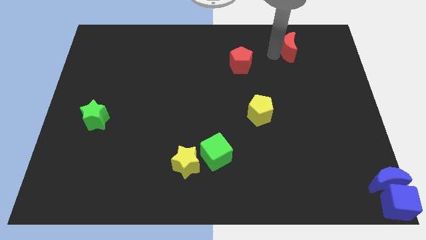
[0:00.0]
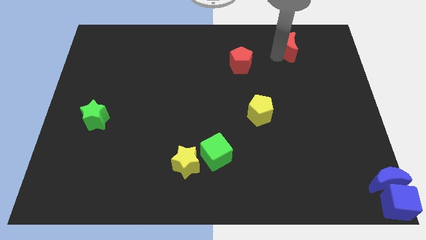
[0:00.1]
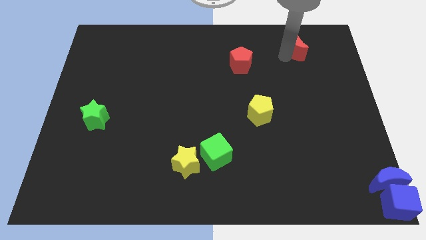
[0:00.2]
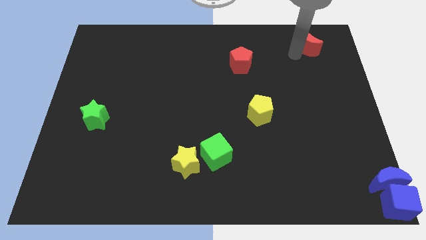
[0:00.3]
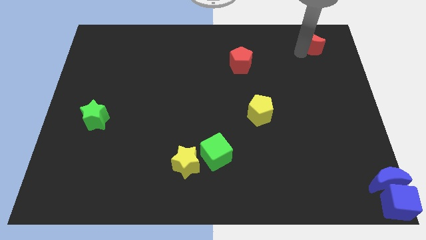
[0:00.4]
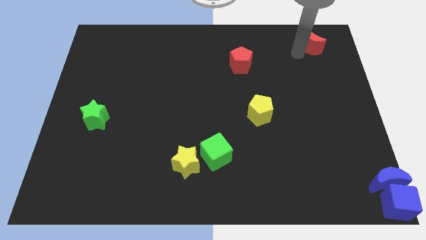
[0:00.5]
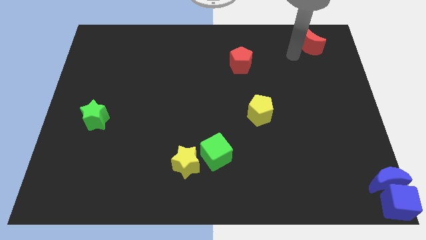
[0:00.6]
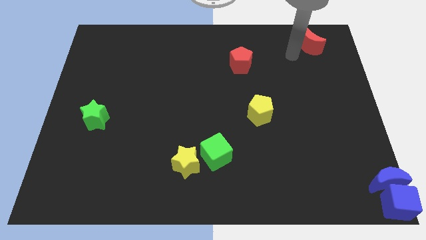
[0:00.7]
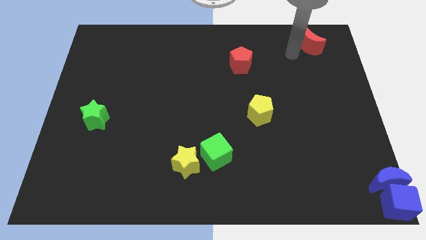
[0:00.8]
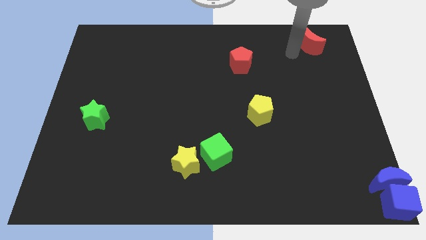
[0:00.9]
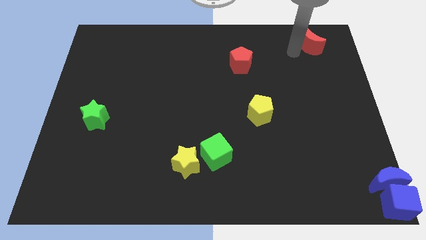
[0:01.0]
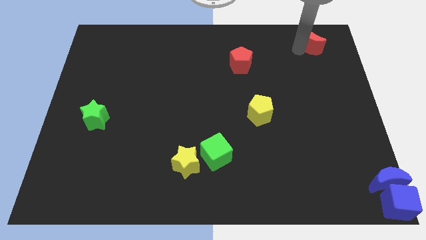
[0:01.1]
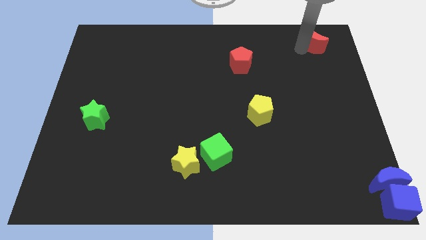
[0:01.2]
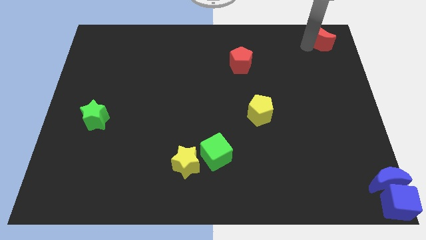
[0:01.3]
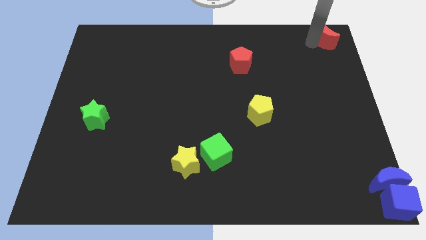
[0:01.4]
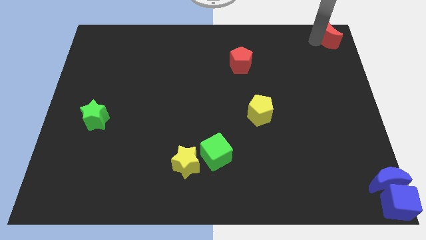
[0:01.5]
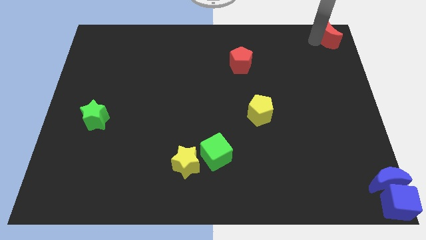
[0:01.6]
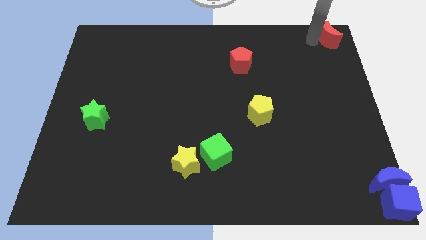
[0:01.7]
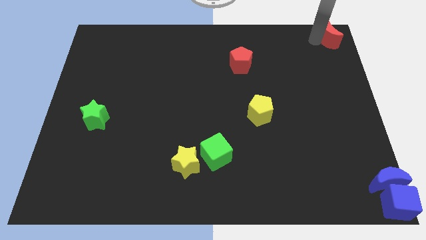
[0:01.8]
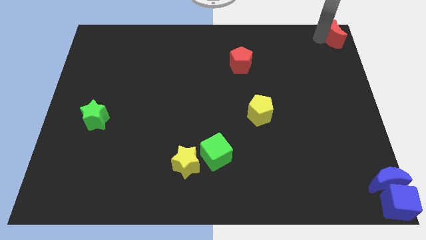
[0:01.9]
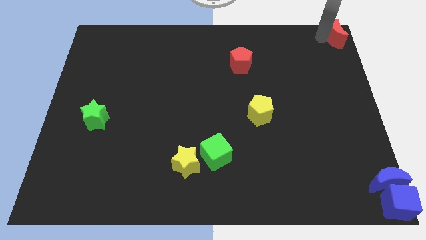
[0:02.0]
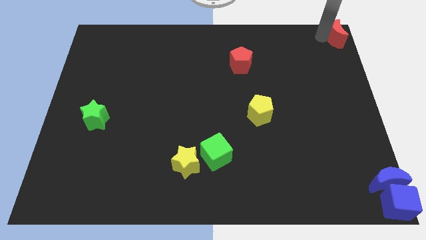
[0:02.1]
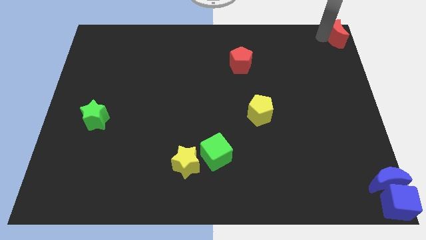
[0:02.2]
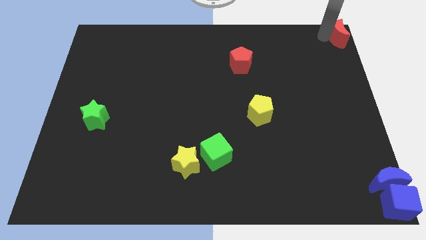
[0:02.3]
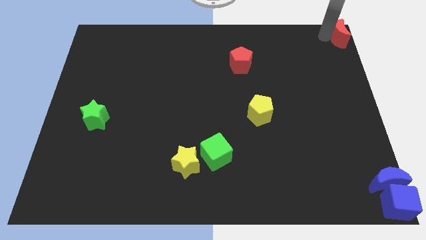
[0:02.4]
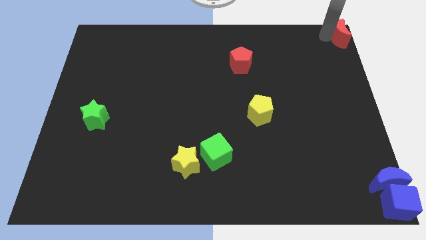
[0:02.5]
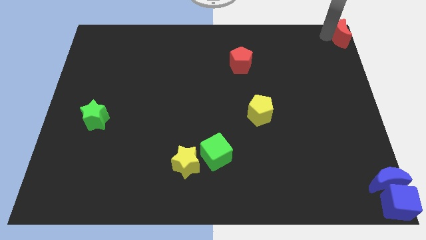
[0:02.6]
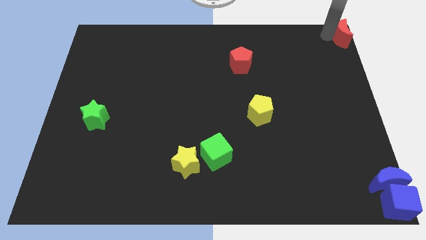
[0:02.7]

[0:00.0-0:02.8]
move the red moon to the top right corner

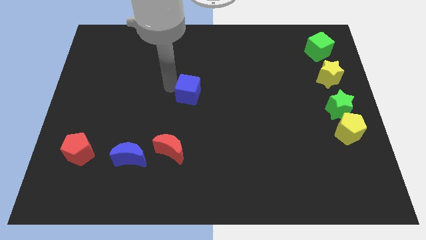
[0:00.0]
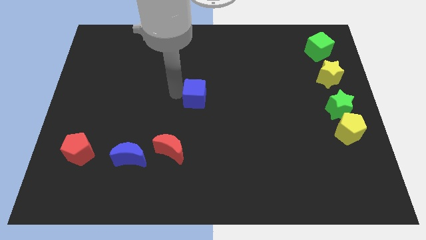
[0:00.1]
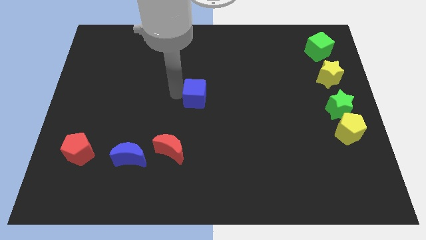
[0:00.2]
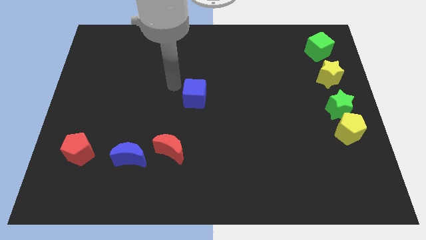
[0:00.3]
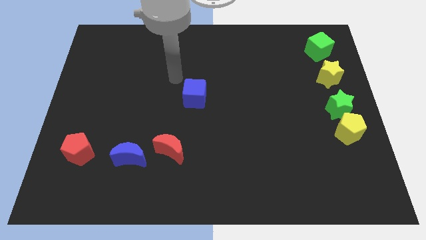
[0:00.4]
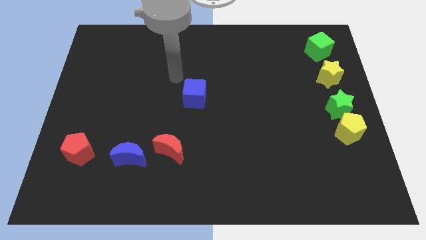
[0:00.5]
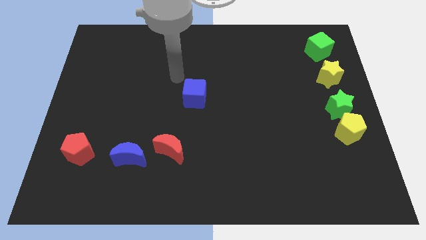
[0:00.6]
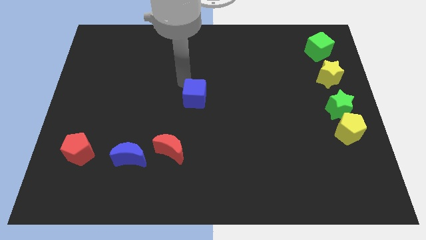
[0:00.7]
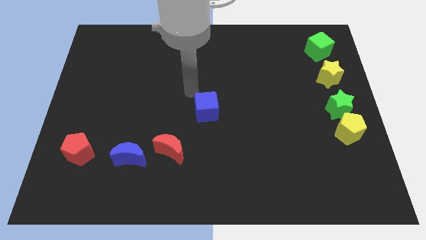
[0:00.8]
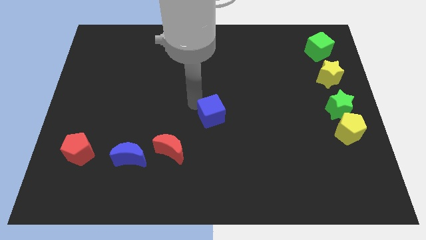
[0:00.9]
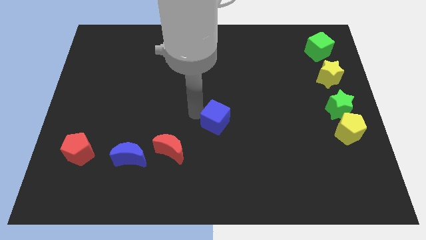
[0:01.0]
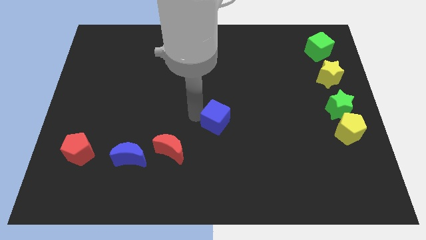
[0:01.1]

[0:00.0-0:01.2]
place the blue cube at the center of the board

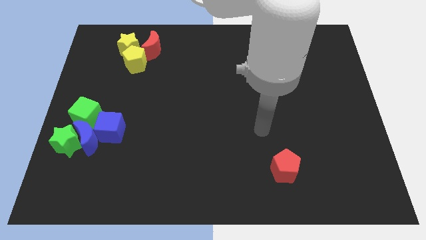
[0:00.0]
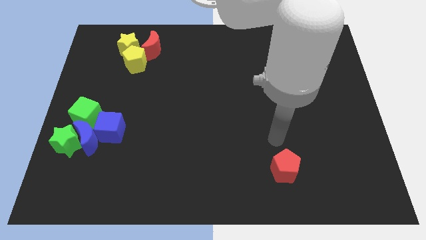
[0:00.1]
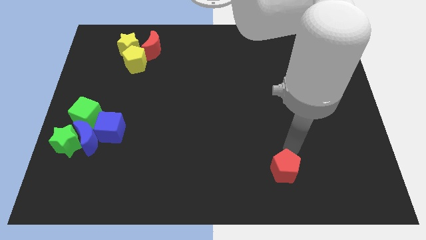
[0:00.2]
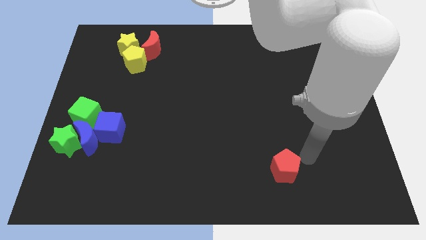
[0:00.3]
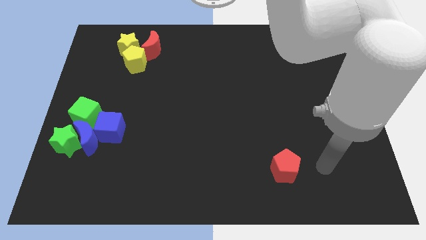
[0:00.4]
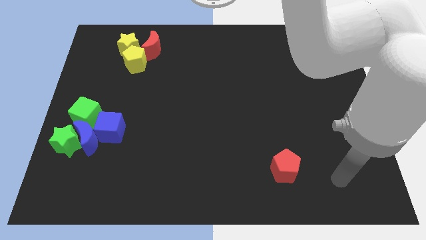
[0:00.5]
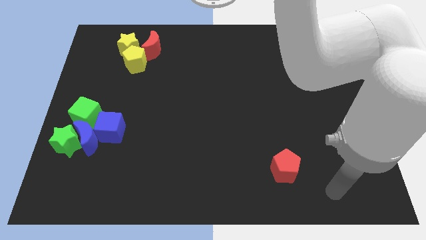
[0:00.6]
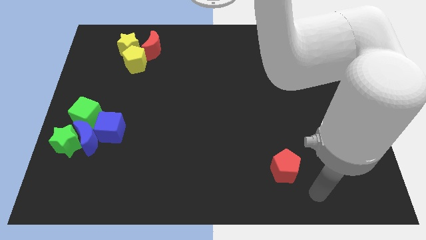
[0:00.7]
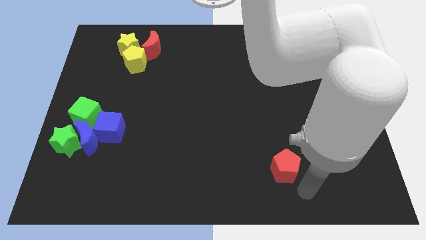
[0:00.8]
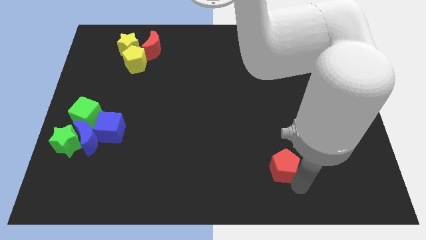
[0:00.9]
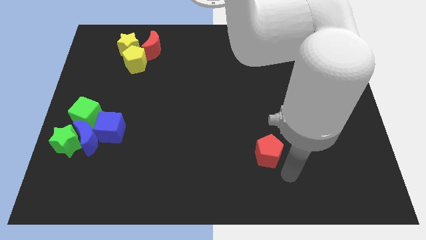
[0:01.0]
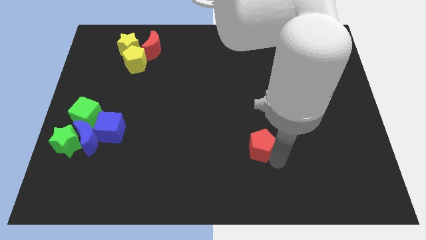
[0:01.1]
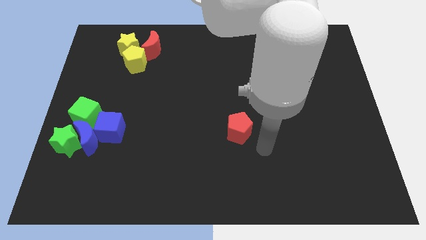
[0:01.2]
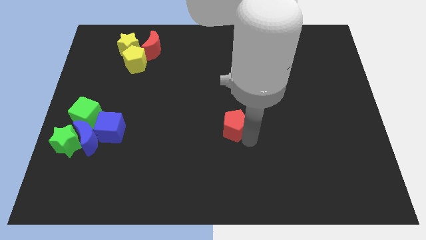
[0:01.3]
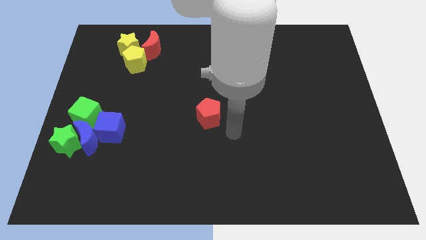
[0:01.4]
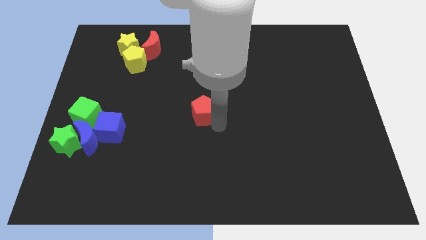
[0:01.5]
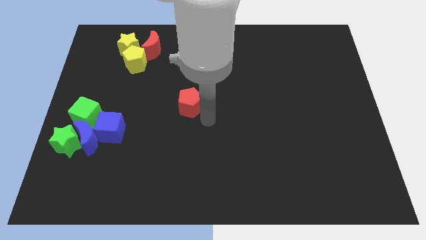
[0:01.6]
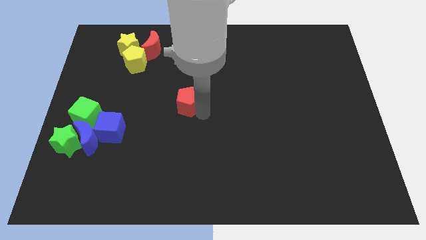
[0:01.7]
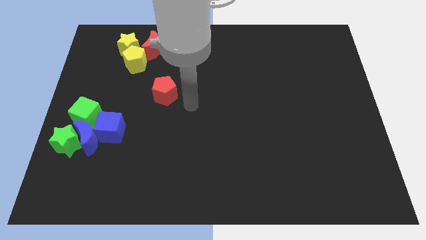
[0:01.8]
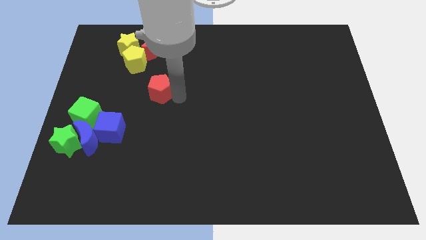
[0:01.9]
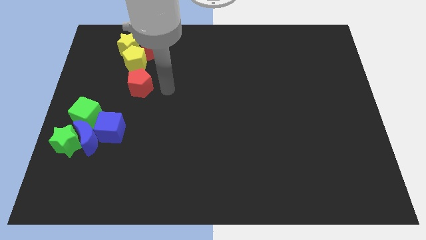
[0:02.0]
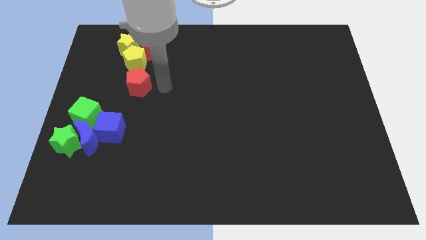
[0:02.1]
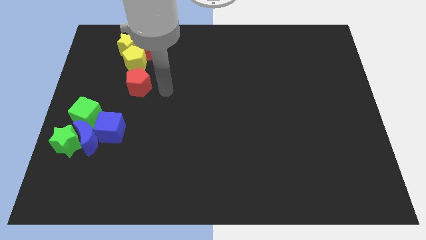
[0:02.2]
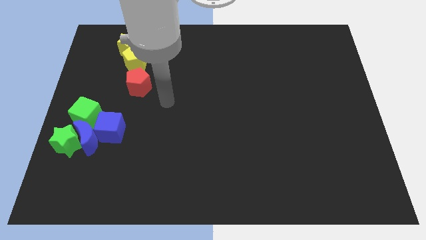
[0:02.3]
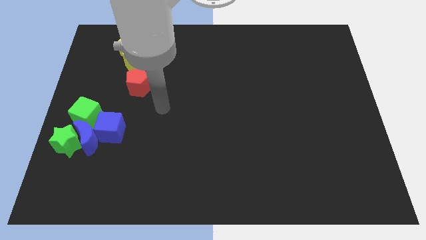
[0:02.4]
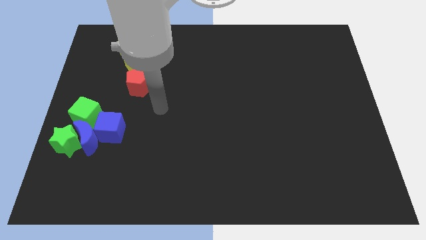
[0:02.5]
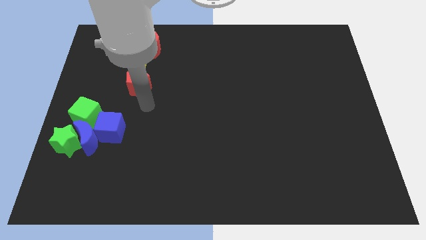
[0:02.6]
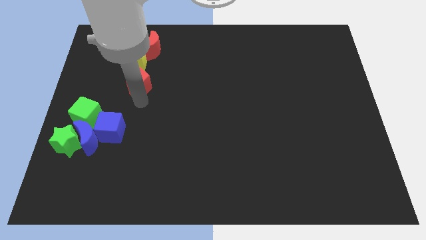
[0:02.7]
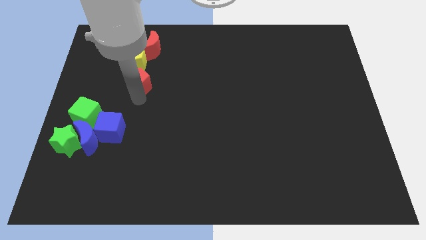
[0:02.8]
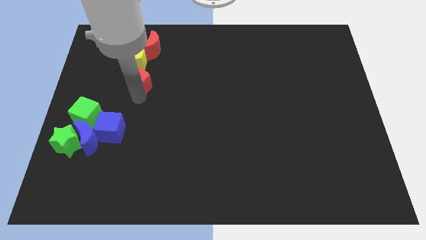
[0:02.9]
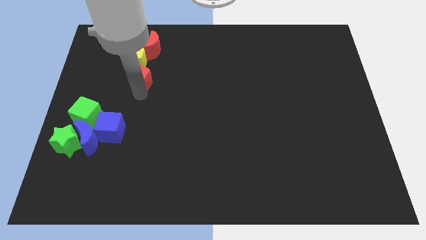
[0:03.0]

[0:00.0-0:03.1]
place the red pentagon below the yellow pentagon

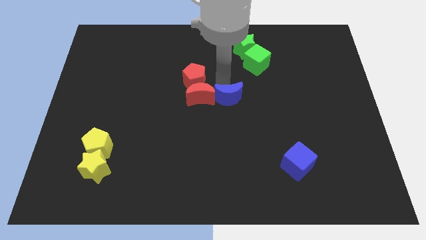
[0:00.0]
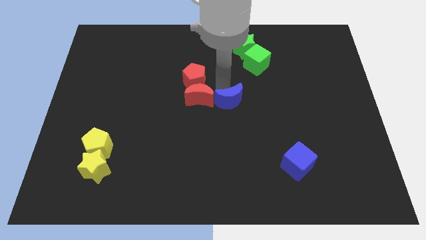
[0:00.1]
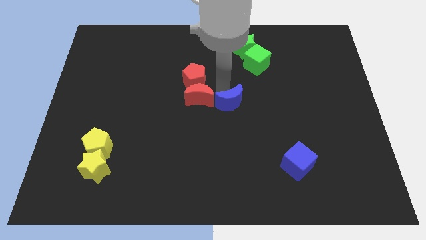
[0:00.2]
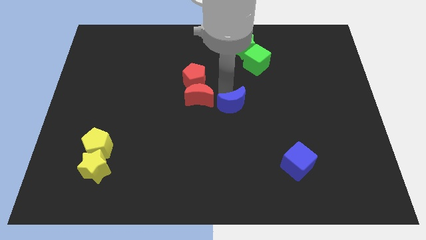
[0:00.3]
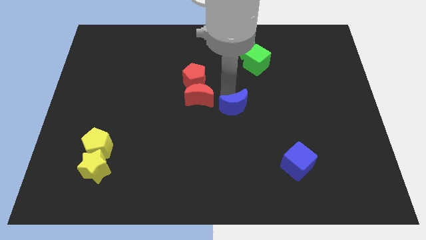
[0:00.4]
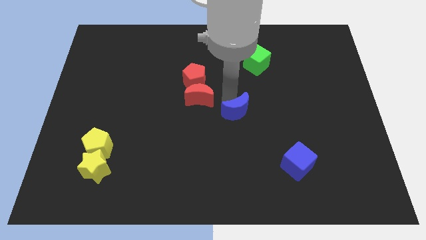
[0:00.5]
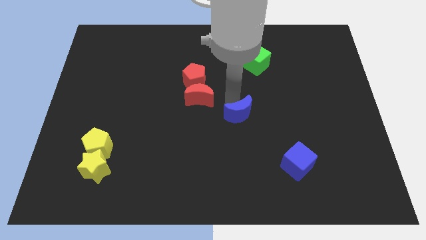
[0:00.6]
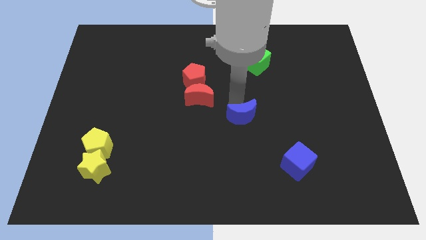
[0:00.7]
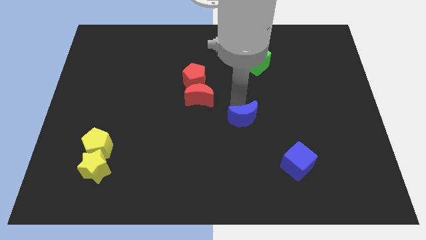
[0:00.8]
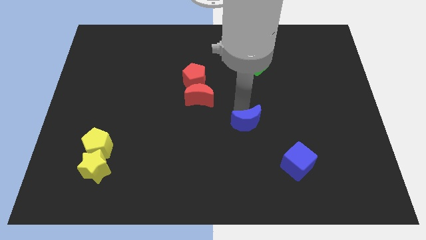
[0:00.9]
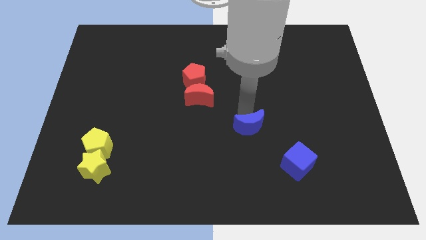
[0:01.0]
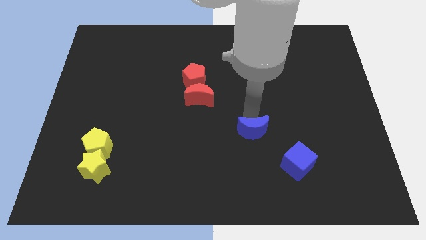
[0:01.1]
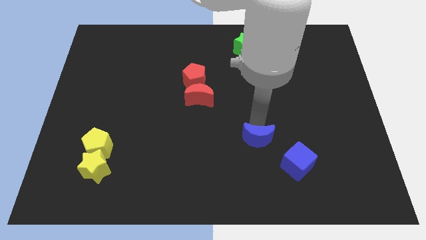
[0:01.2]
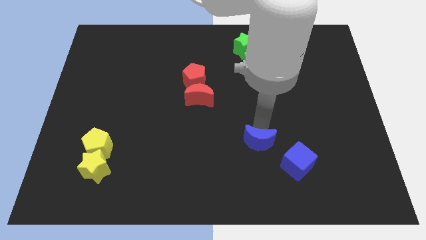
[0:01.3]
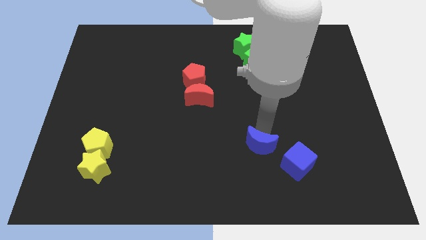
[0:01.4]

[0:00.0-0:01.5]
separate the blue moon from the red moon

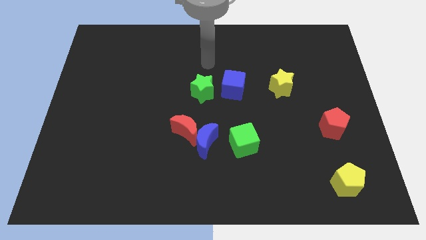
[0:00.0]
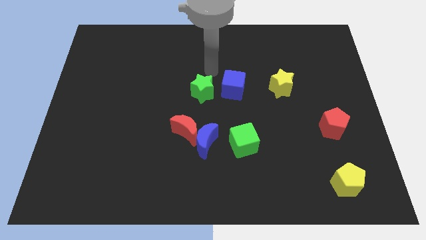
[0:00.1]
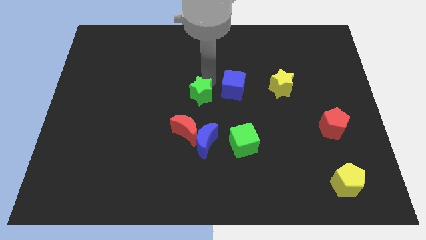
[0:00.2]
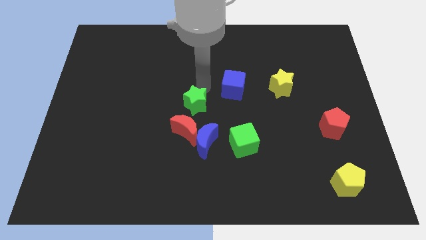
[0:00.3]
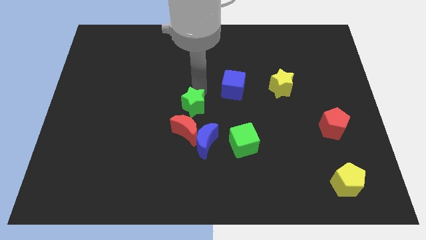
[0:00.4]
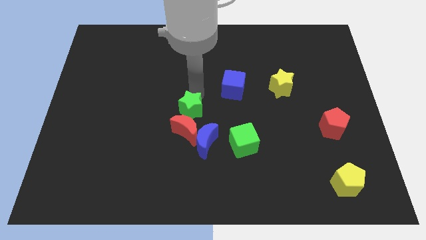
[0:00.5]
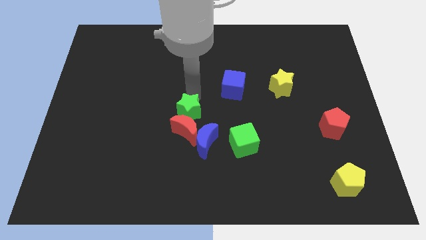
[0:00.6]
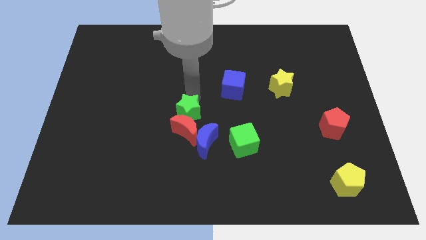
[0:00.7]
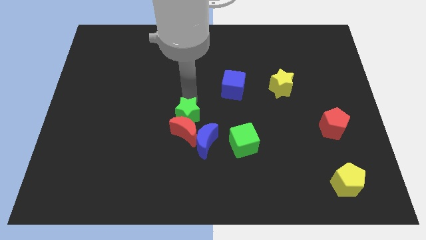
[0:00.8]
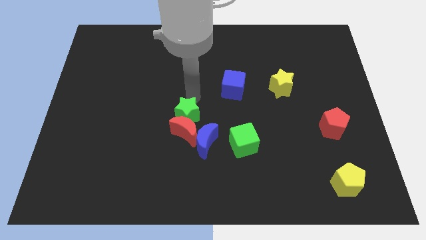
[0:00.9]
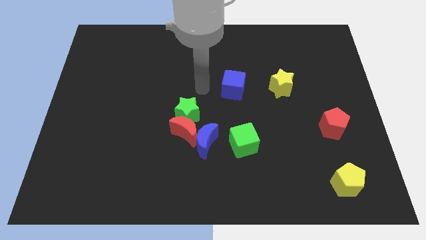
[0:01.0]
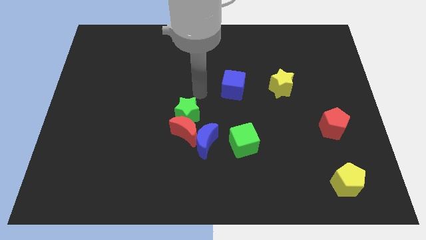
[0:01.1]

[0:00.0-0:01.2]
move the green star above the red crescent
